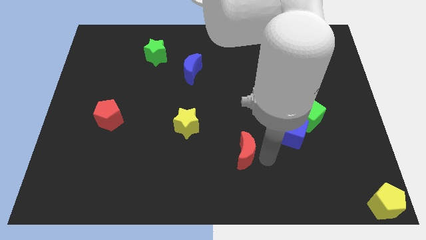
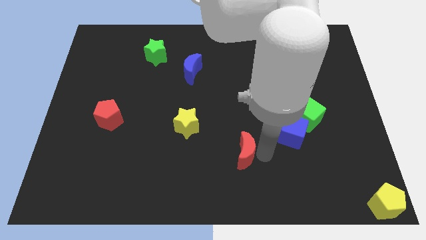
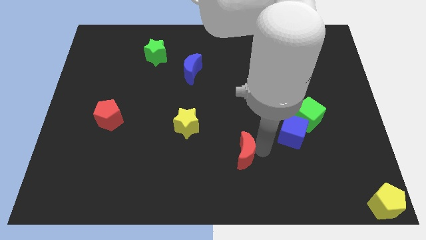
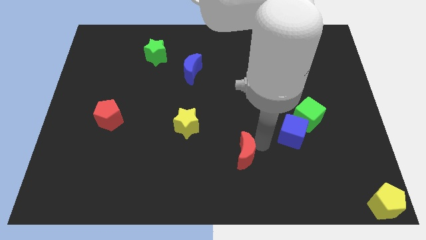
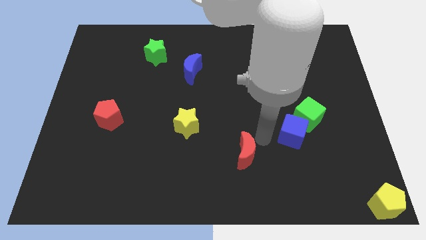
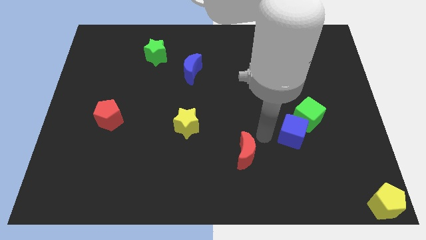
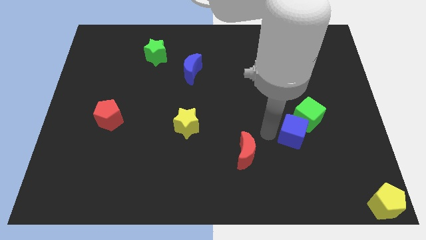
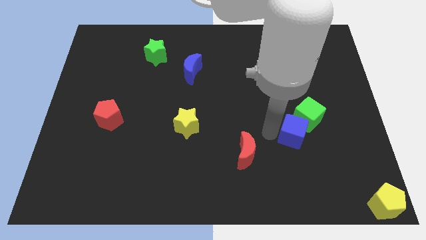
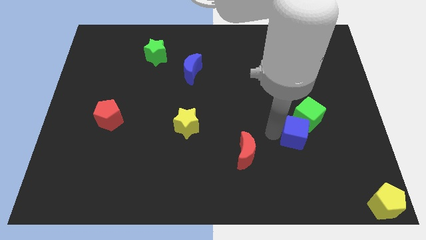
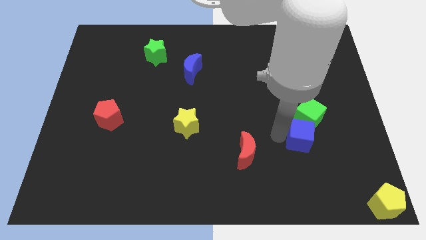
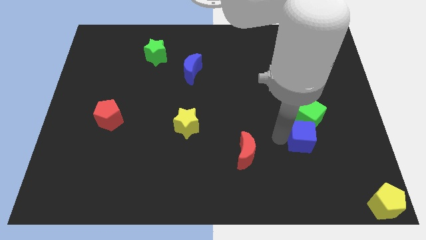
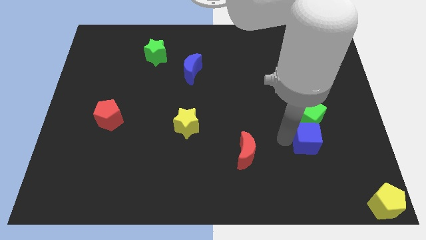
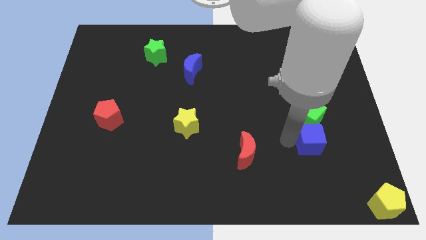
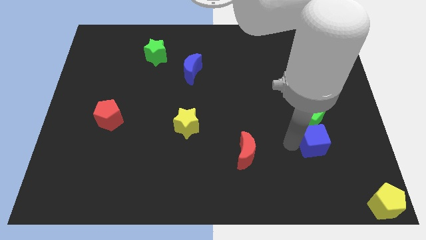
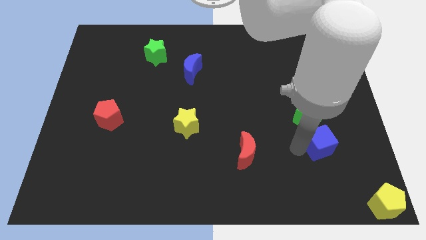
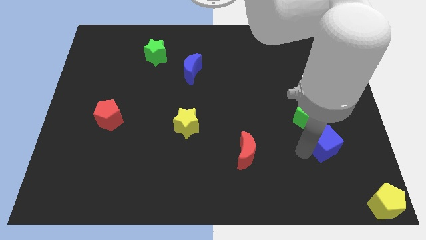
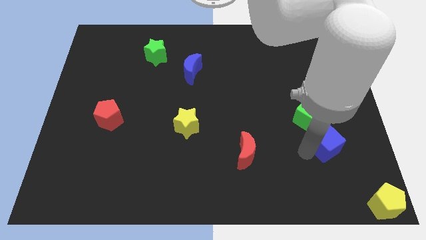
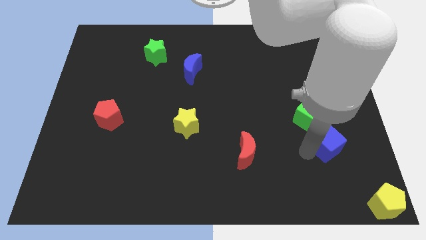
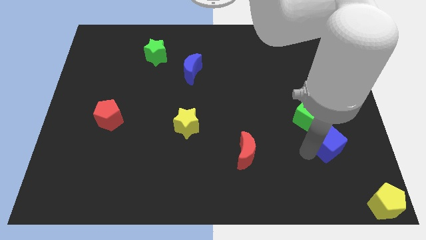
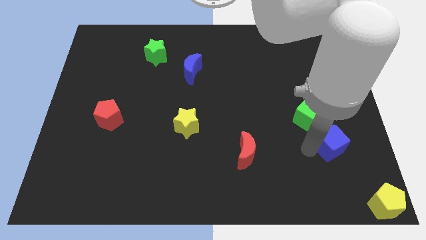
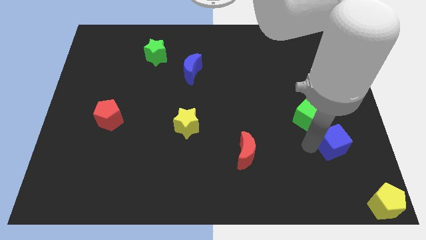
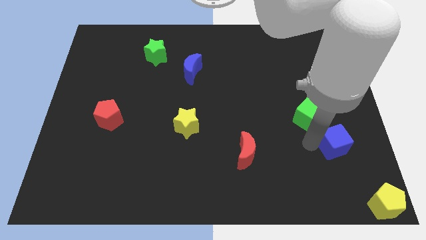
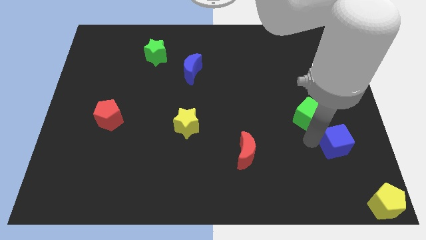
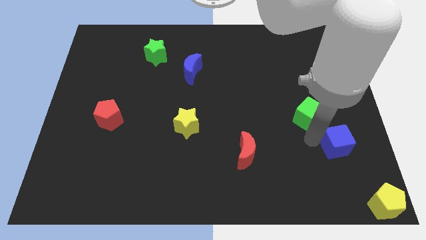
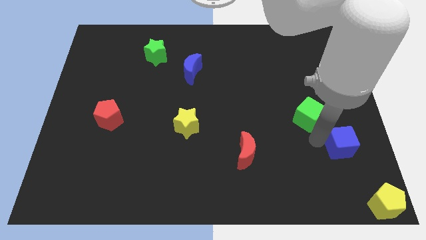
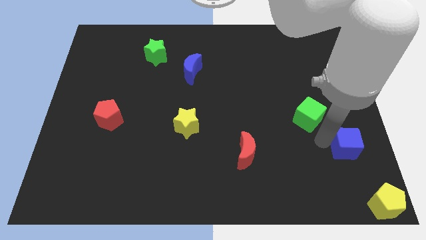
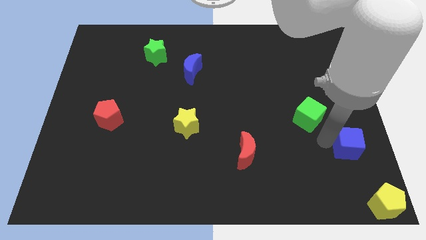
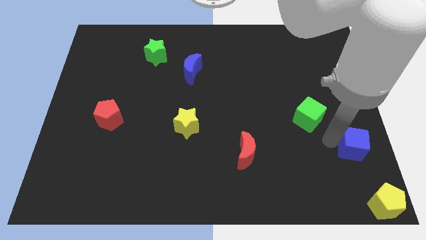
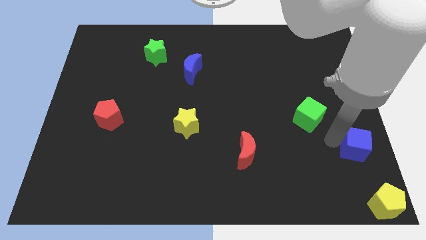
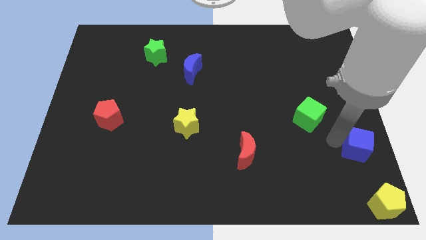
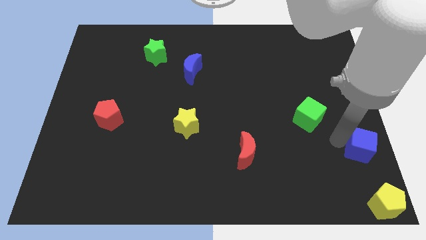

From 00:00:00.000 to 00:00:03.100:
move the blue cube away from the green cube

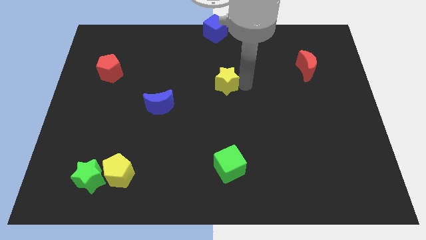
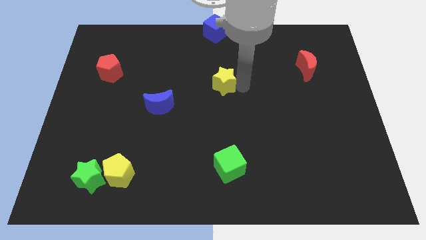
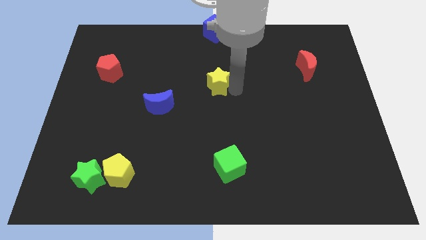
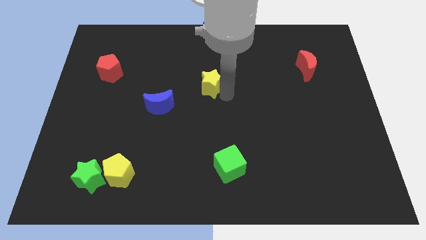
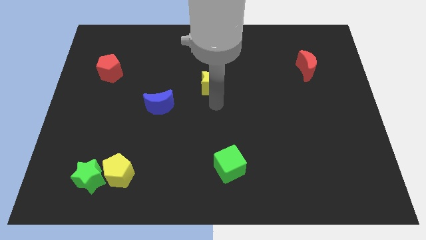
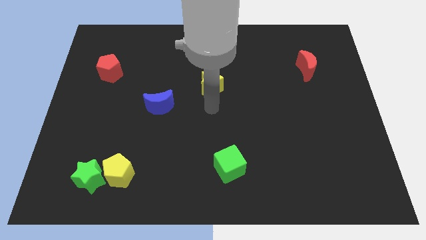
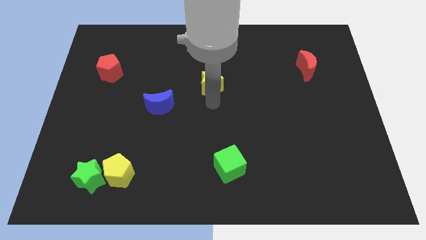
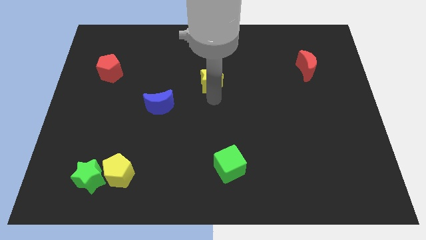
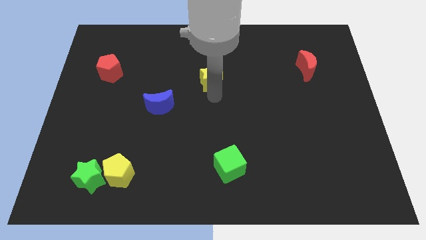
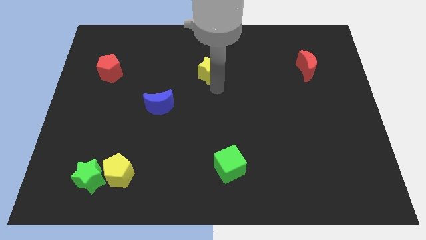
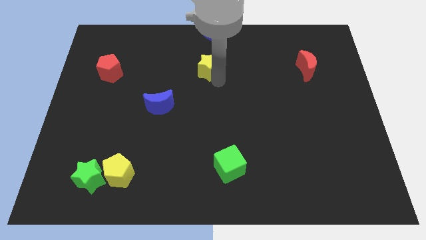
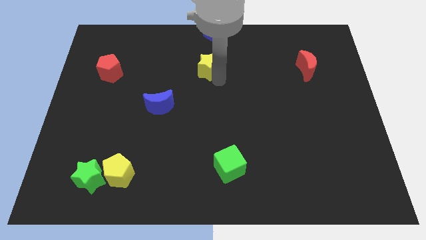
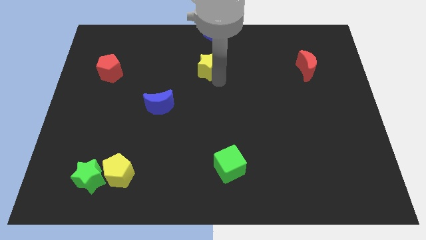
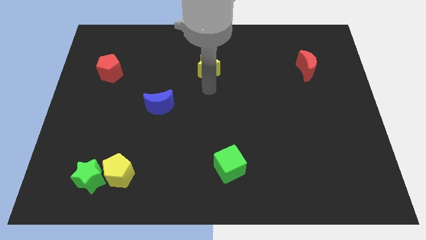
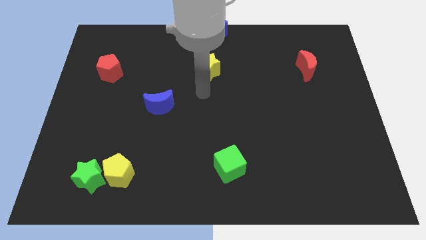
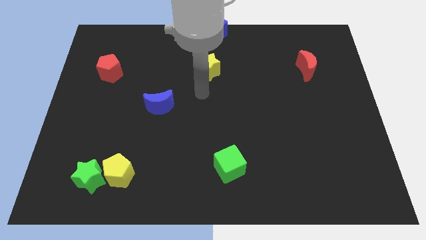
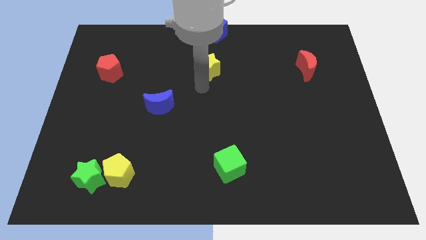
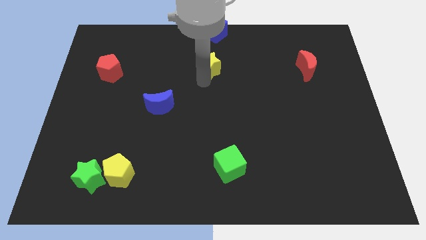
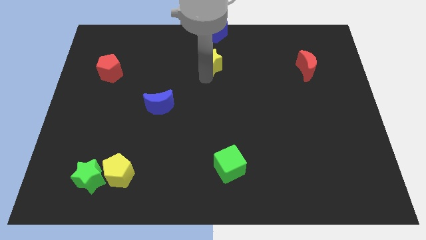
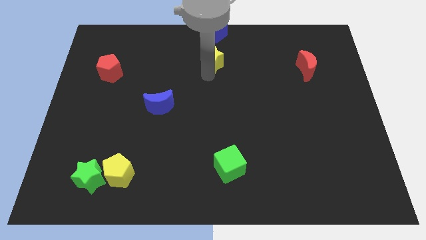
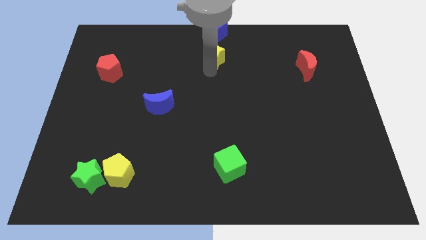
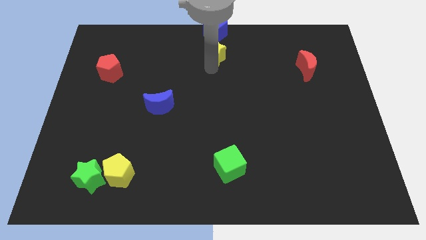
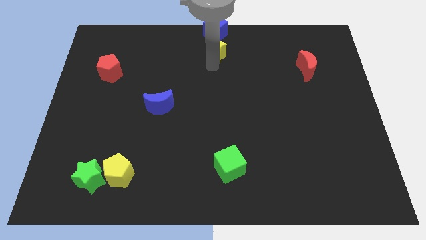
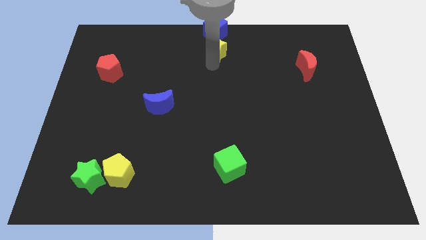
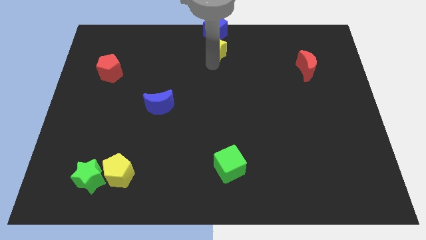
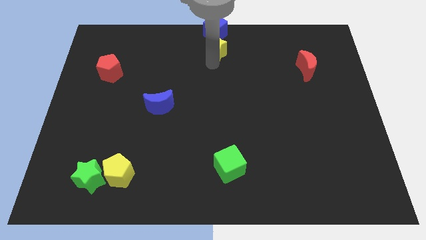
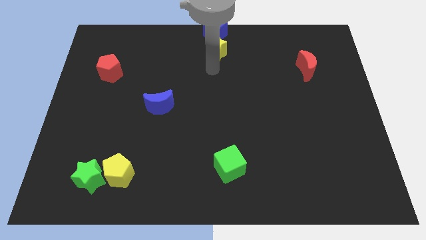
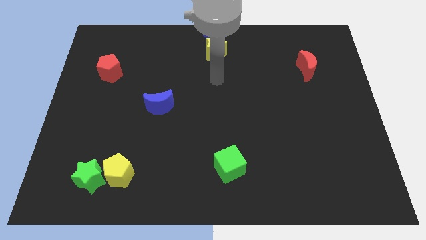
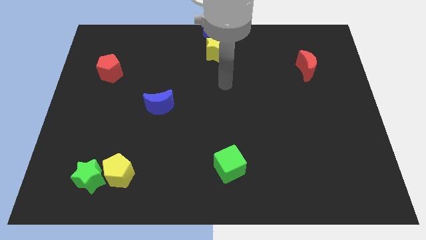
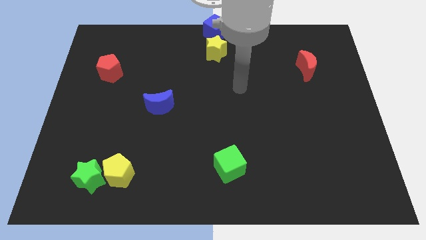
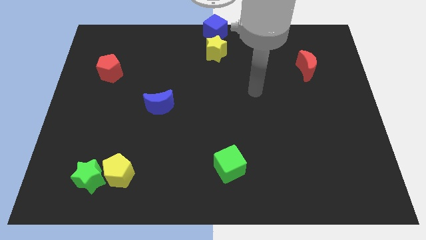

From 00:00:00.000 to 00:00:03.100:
move the yellow star to the bottom of the blue cube

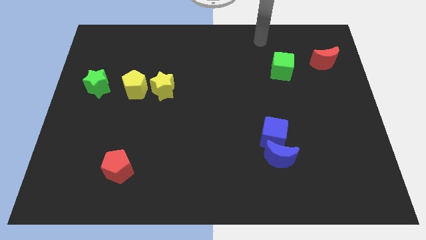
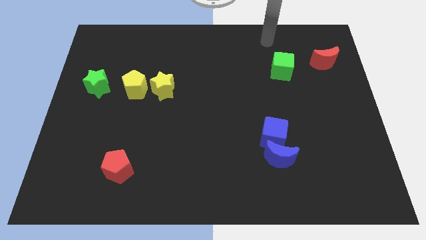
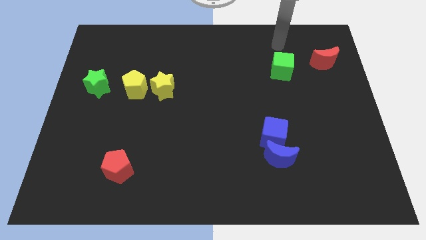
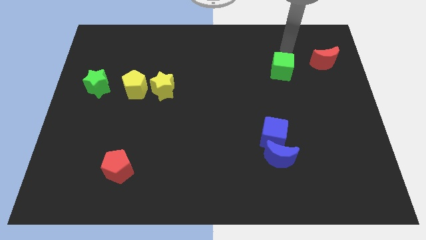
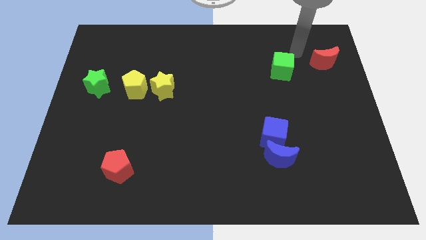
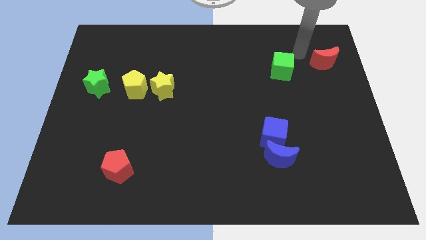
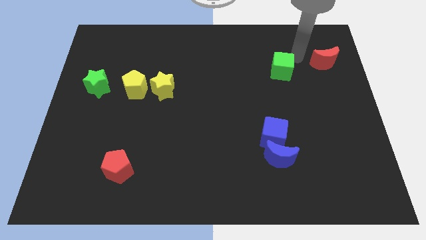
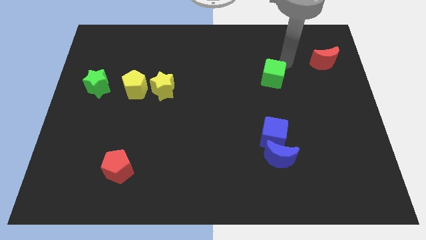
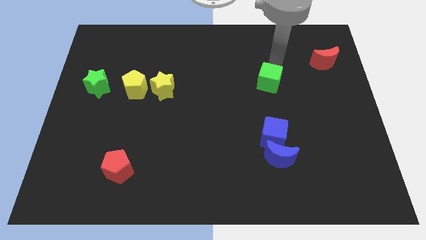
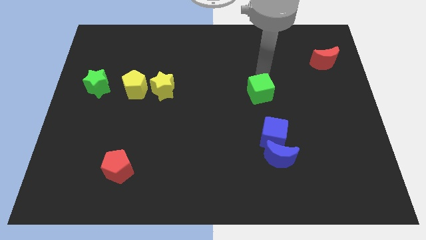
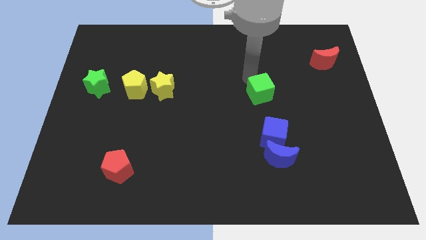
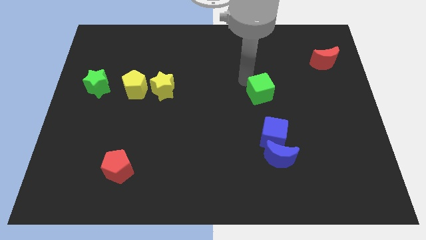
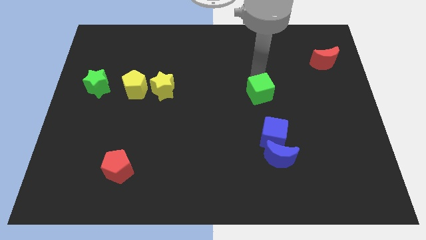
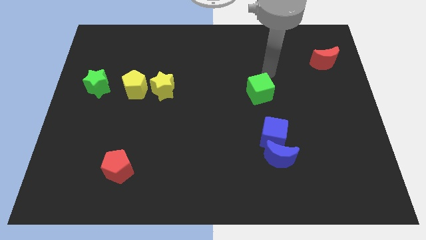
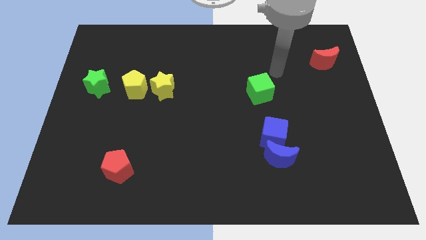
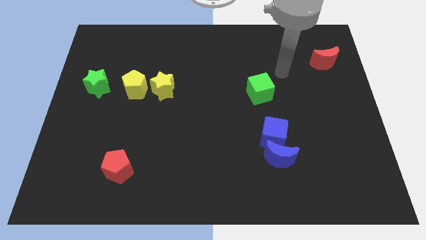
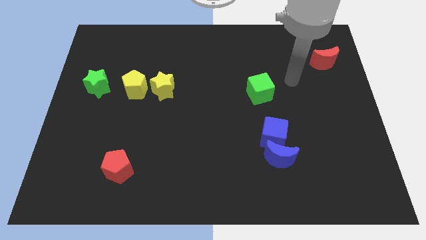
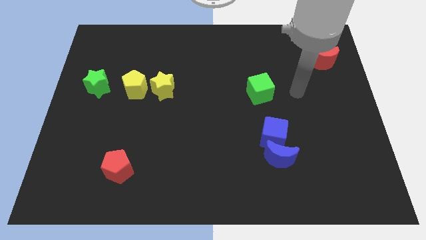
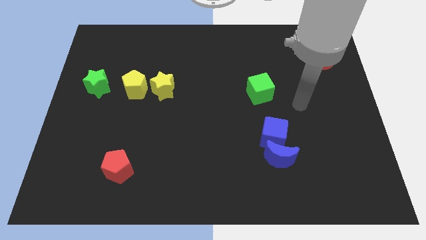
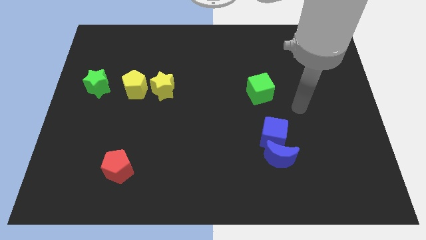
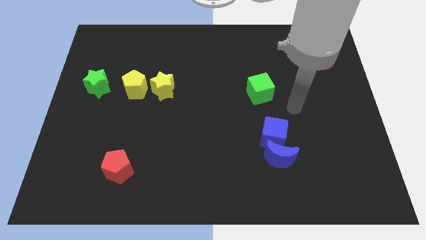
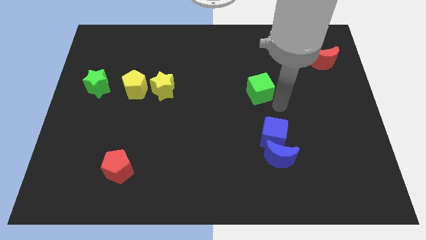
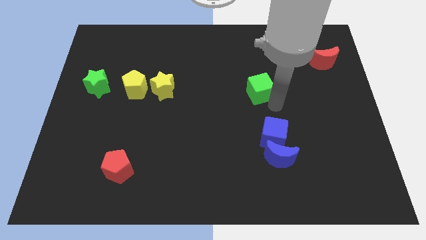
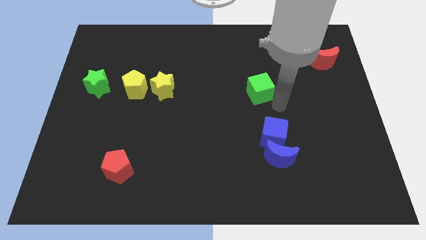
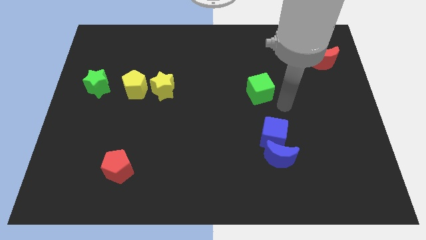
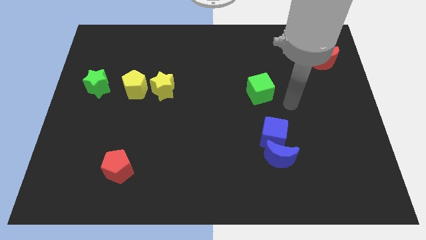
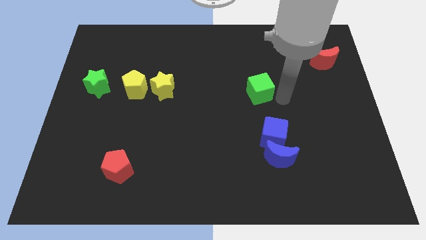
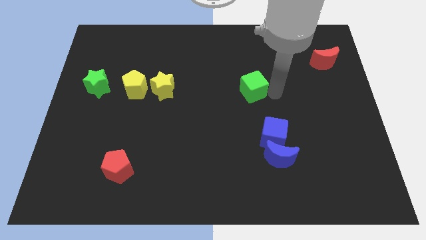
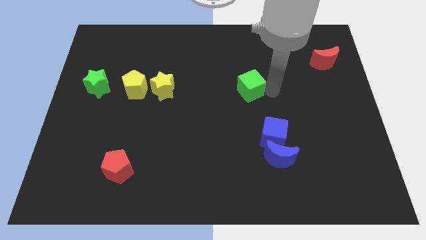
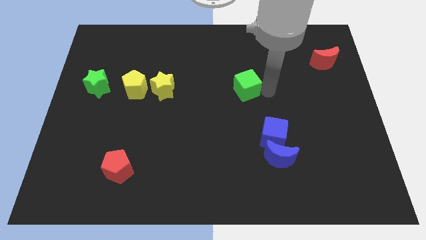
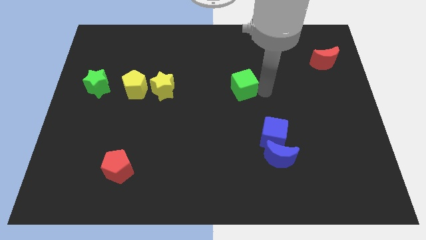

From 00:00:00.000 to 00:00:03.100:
slightly move green cube to top left of the blue cube
